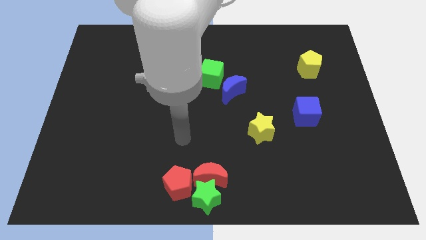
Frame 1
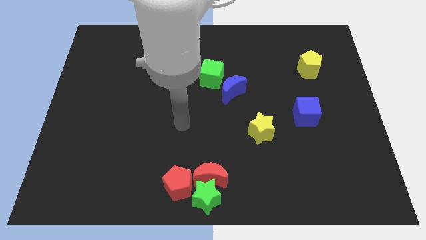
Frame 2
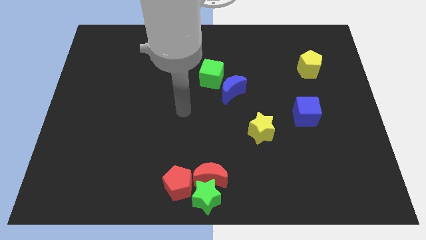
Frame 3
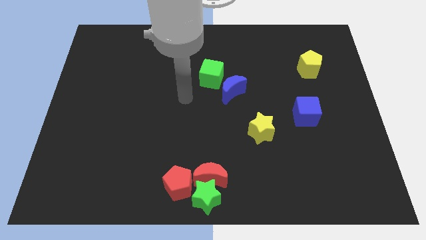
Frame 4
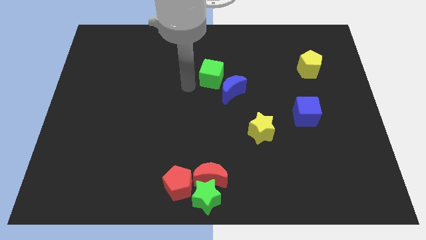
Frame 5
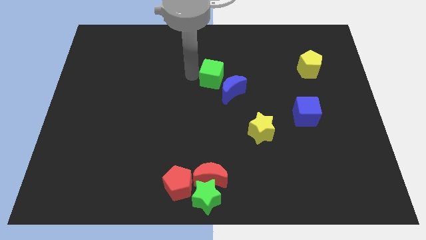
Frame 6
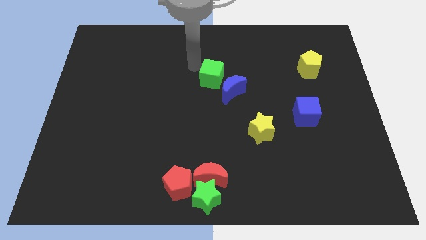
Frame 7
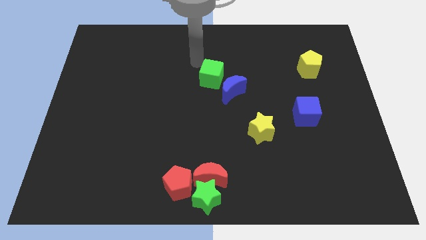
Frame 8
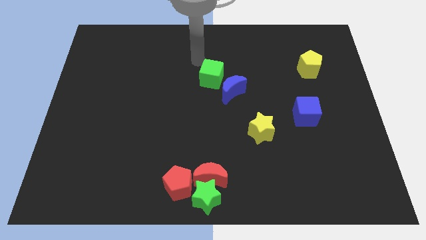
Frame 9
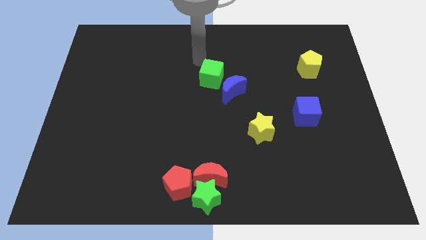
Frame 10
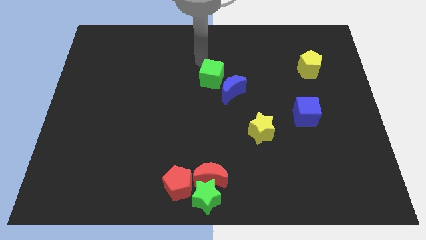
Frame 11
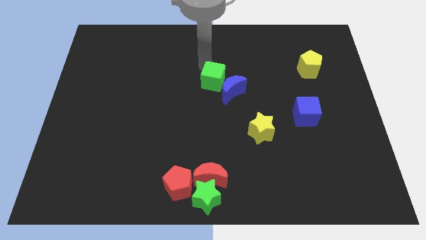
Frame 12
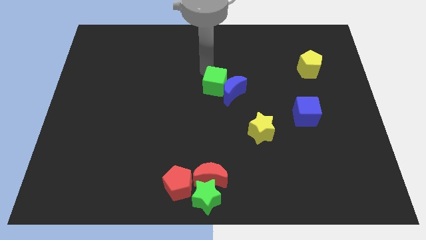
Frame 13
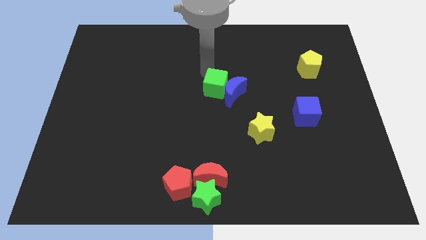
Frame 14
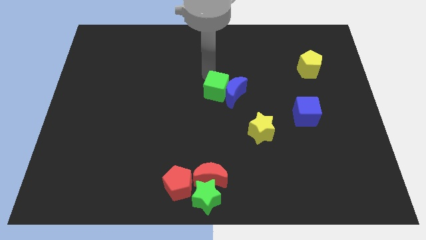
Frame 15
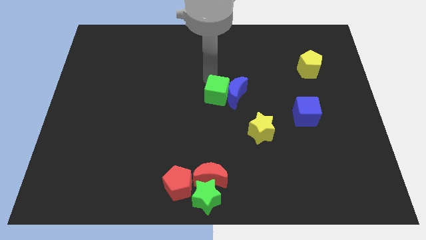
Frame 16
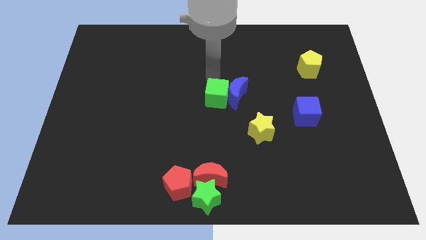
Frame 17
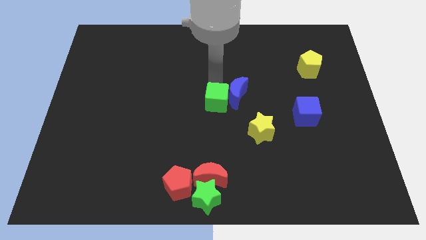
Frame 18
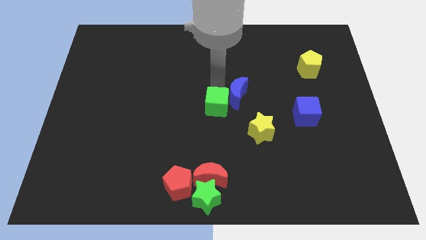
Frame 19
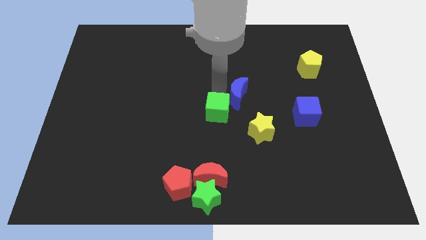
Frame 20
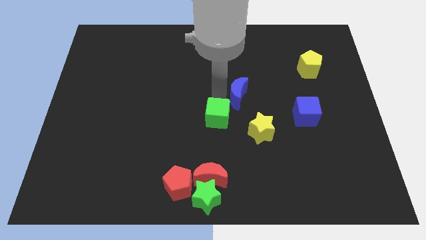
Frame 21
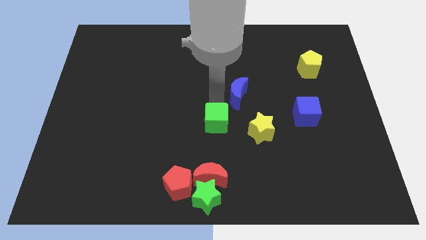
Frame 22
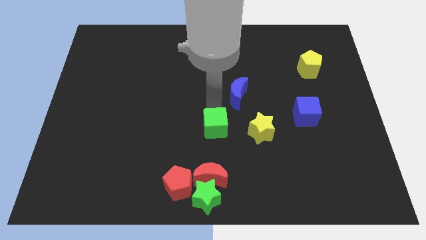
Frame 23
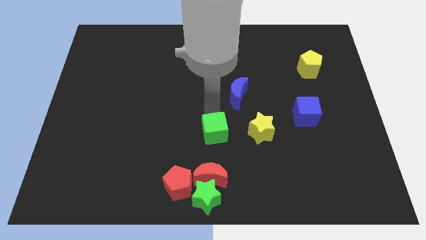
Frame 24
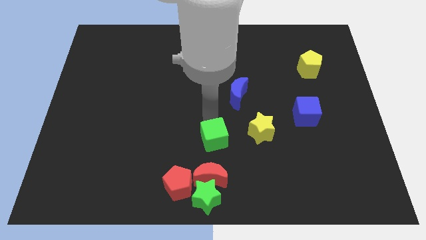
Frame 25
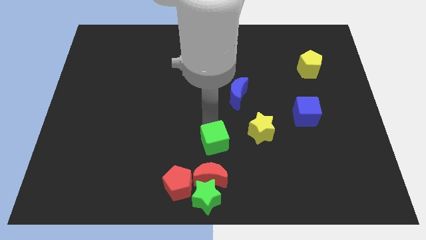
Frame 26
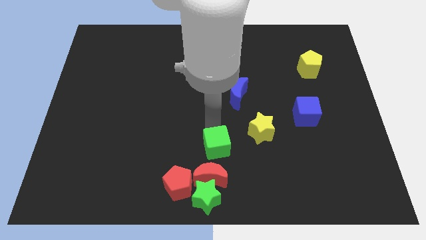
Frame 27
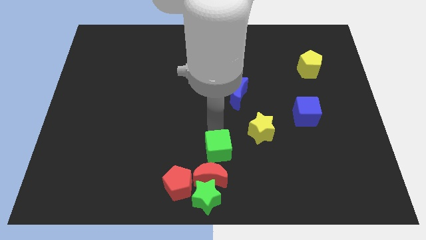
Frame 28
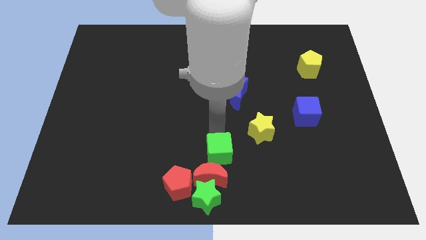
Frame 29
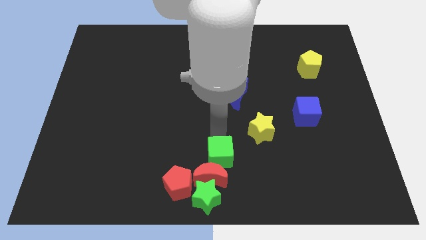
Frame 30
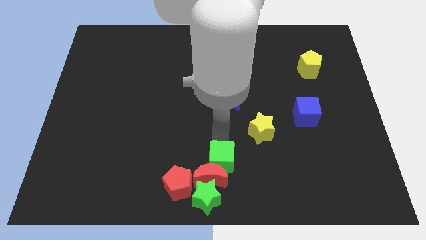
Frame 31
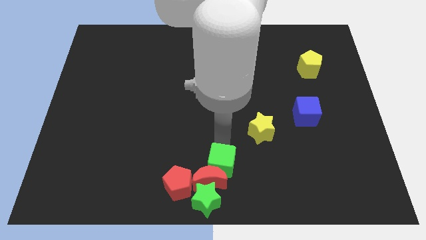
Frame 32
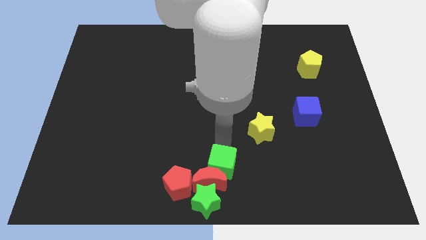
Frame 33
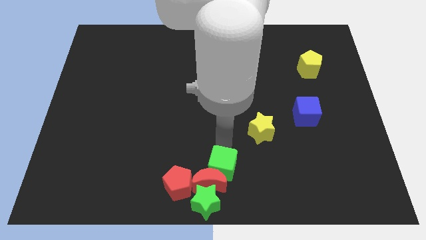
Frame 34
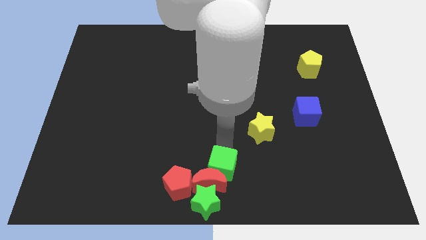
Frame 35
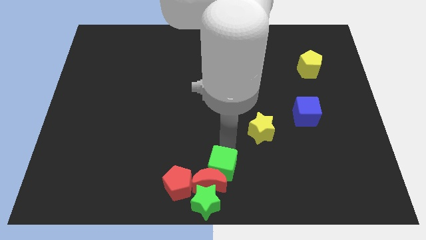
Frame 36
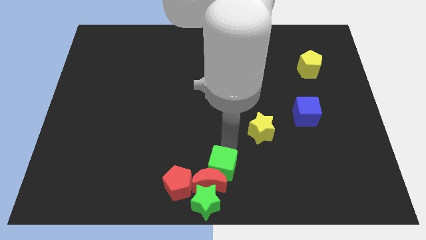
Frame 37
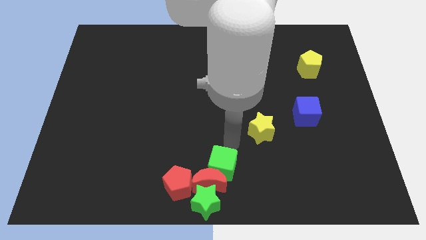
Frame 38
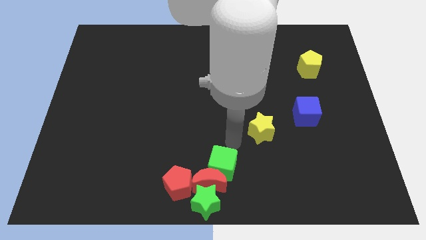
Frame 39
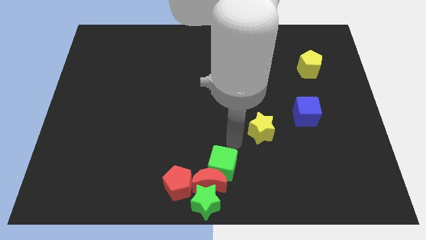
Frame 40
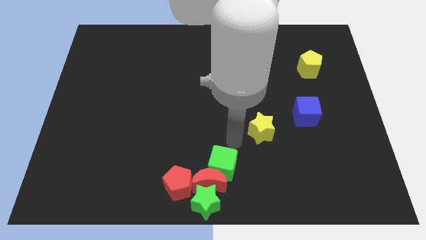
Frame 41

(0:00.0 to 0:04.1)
push the green cube to the top of the red crescent

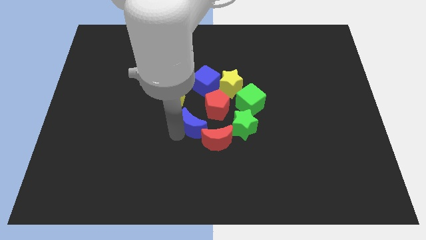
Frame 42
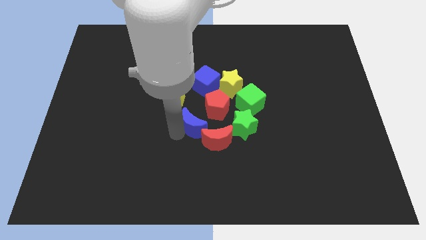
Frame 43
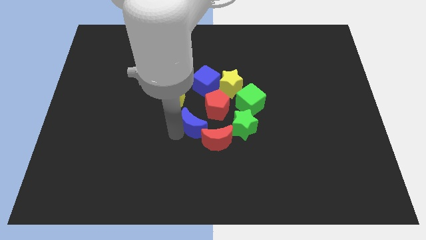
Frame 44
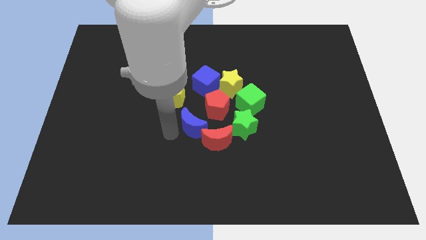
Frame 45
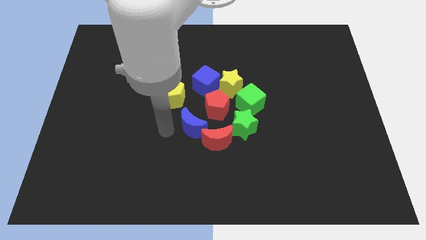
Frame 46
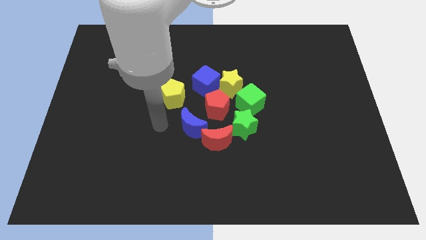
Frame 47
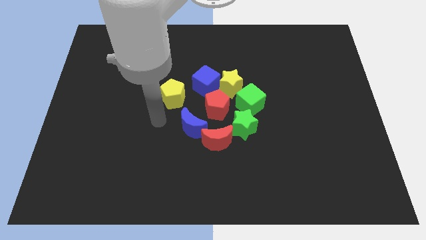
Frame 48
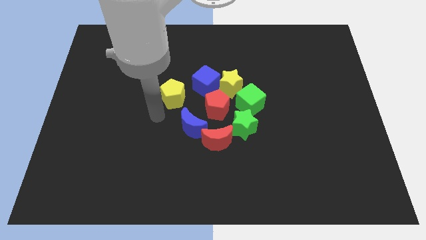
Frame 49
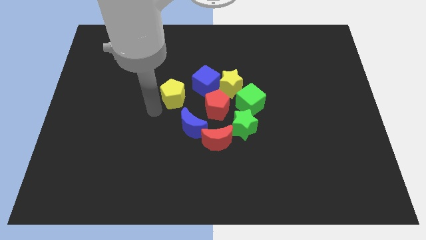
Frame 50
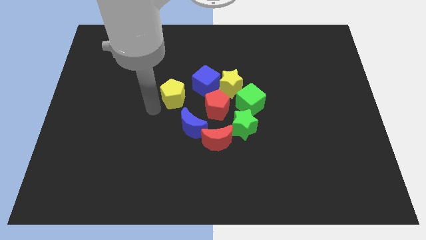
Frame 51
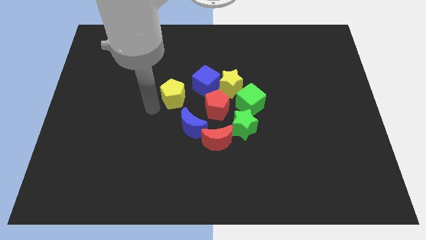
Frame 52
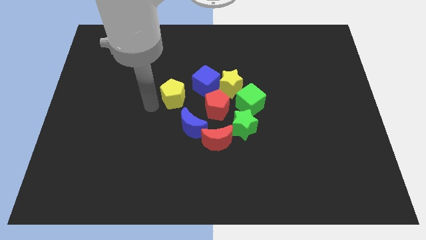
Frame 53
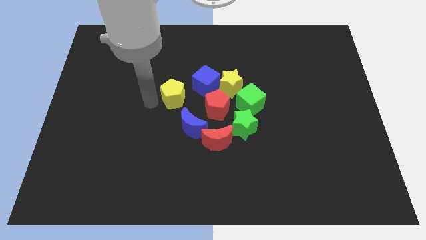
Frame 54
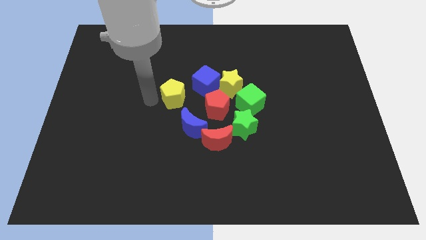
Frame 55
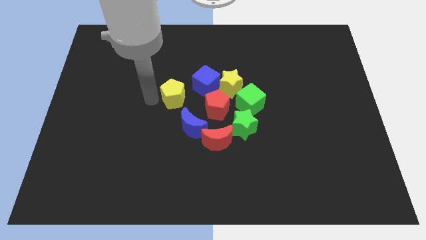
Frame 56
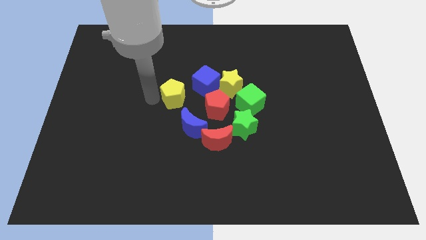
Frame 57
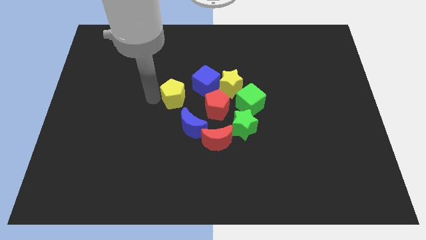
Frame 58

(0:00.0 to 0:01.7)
place the arm to the left of the yellow pentagon

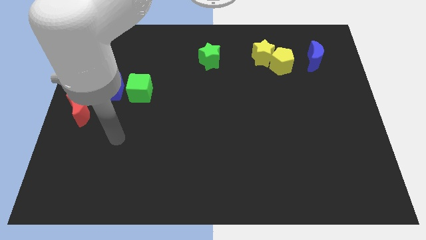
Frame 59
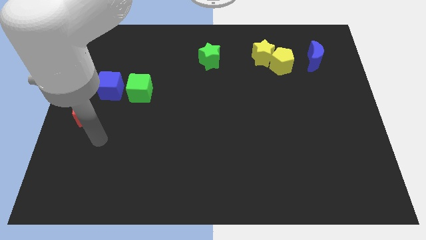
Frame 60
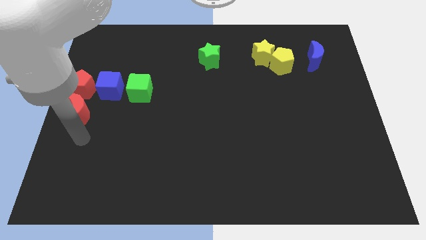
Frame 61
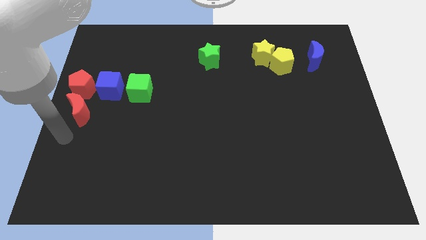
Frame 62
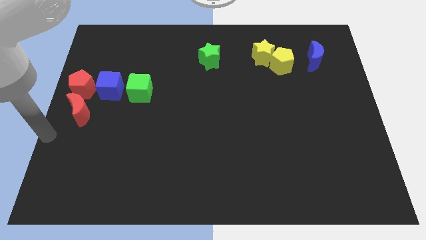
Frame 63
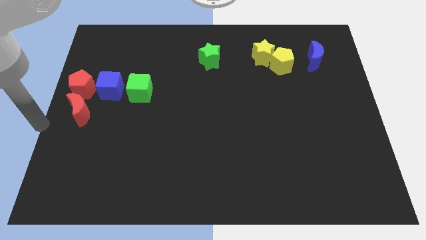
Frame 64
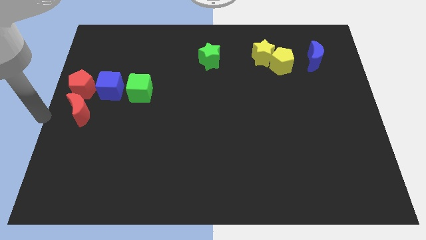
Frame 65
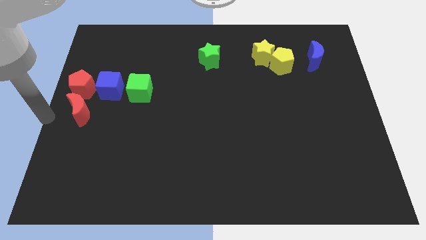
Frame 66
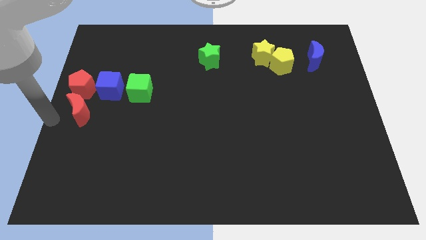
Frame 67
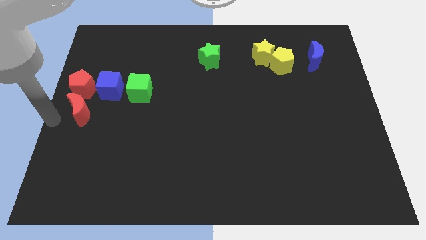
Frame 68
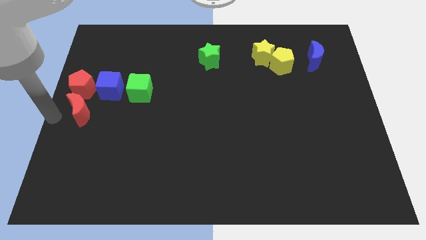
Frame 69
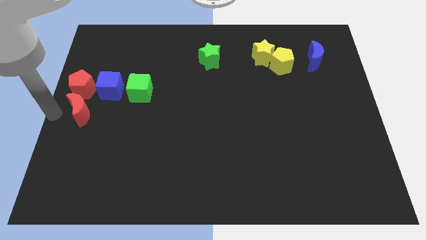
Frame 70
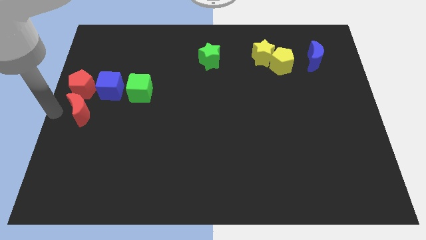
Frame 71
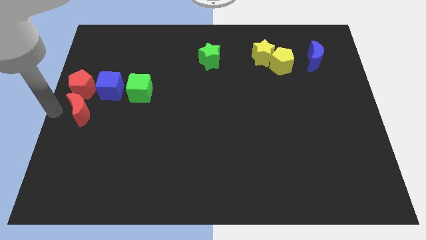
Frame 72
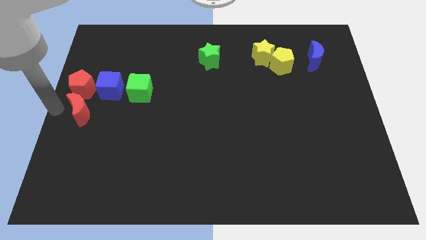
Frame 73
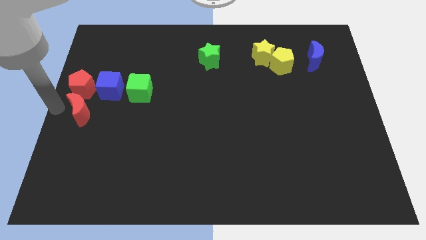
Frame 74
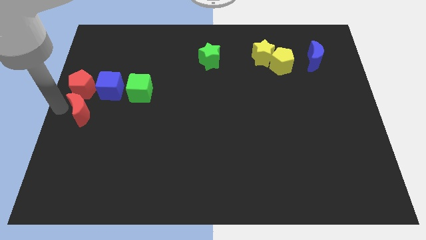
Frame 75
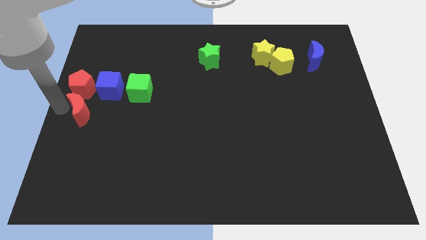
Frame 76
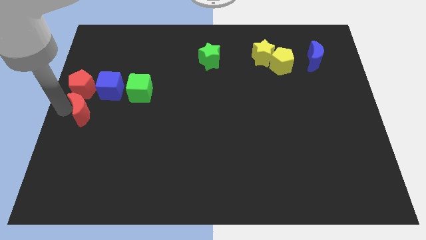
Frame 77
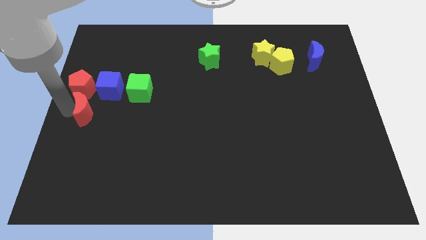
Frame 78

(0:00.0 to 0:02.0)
push red moon slightly

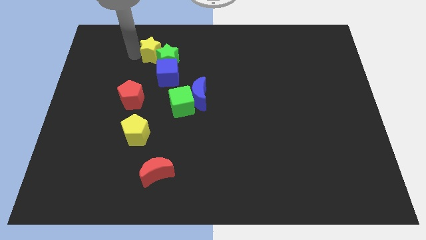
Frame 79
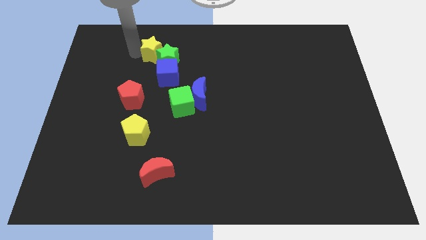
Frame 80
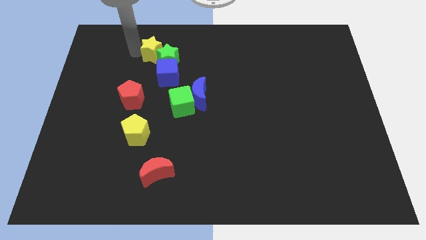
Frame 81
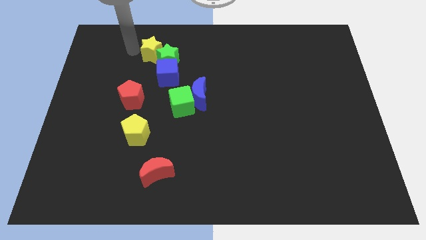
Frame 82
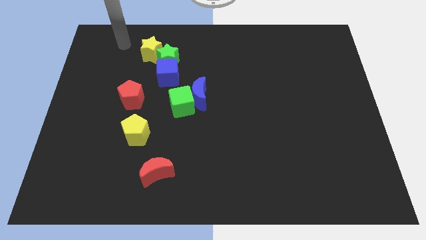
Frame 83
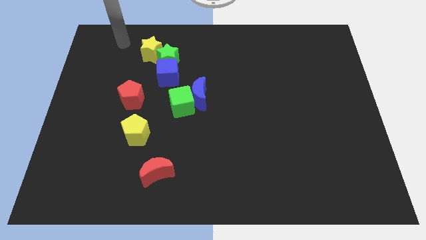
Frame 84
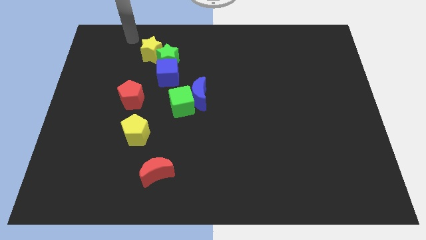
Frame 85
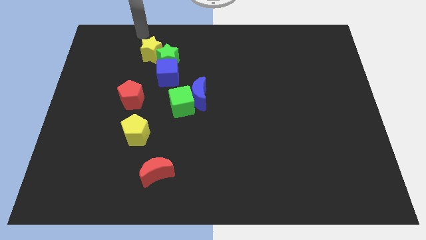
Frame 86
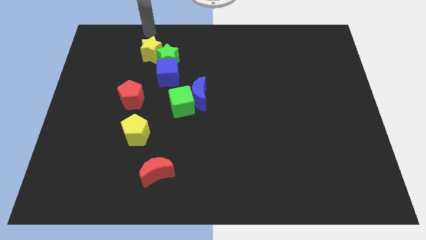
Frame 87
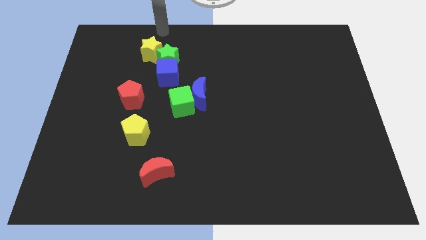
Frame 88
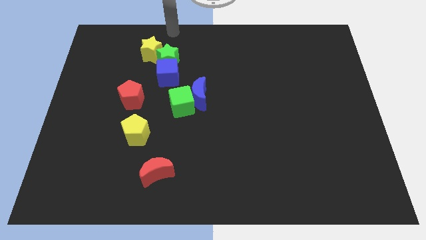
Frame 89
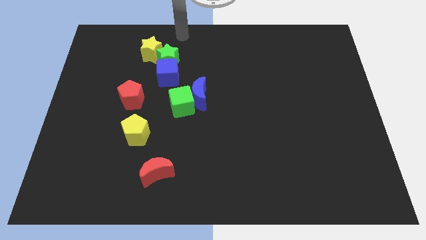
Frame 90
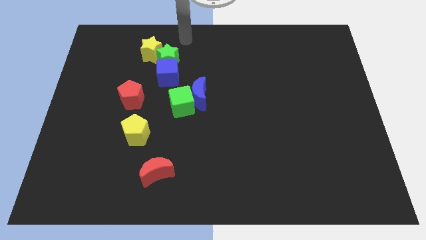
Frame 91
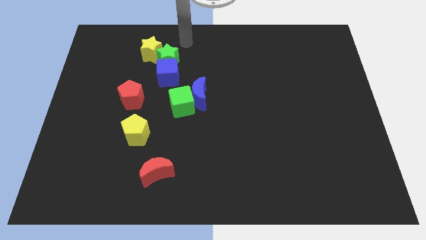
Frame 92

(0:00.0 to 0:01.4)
move your arm away from the yellow star
